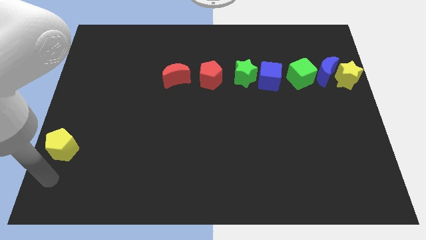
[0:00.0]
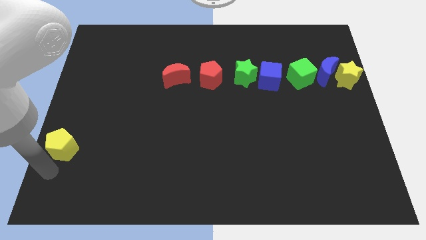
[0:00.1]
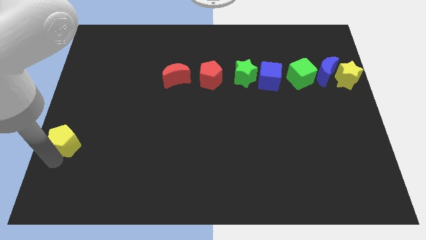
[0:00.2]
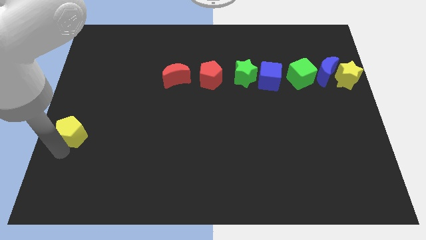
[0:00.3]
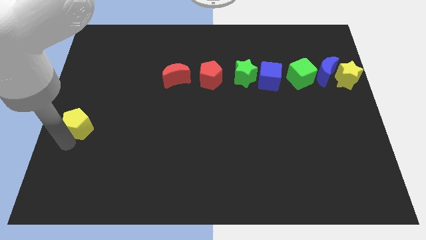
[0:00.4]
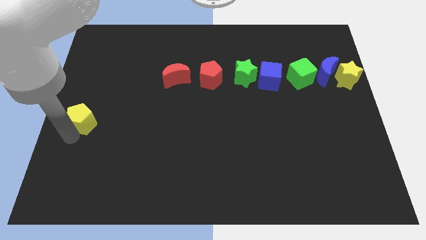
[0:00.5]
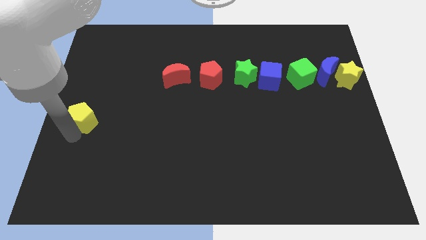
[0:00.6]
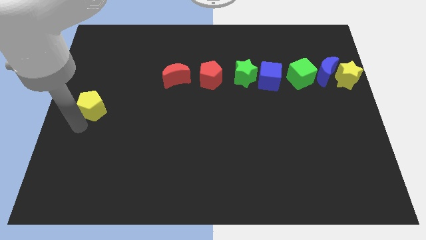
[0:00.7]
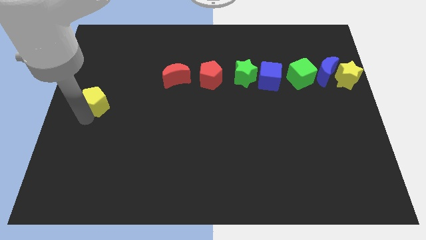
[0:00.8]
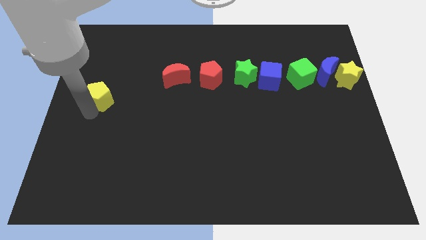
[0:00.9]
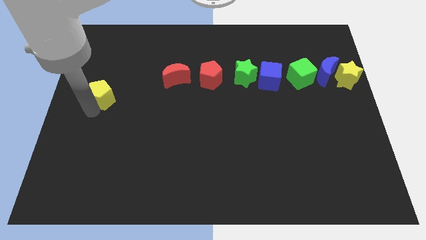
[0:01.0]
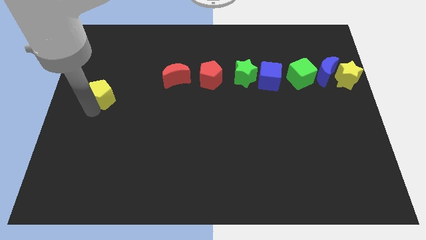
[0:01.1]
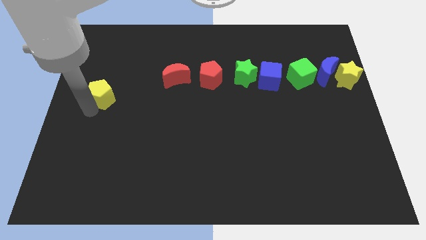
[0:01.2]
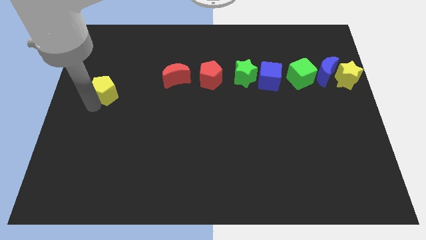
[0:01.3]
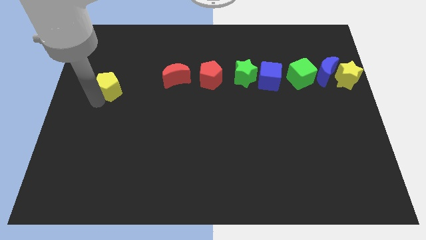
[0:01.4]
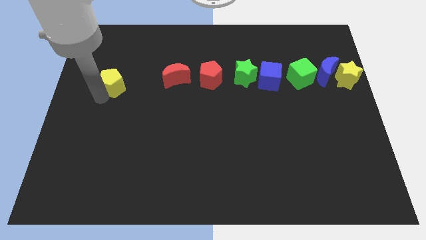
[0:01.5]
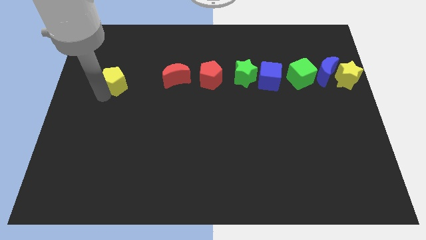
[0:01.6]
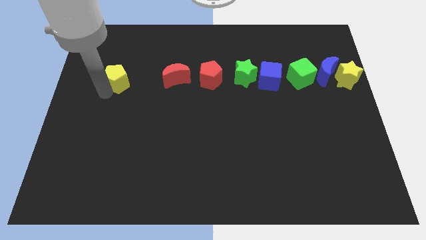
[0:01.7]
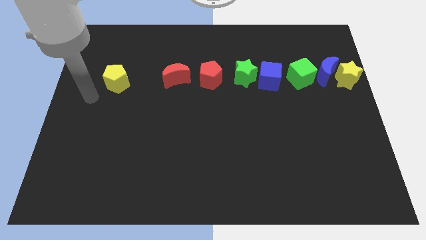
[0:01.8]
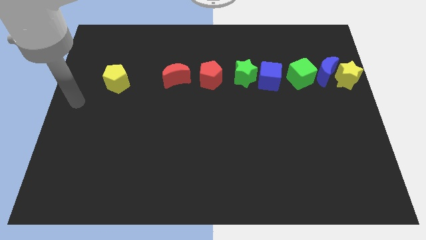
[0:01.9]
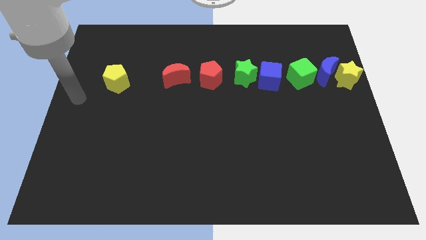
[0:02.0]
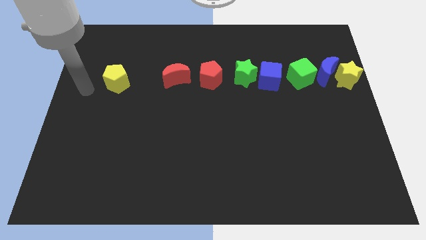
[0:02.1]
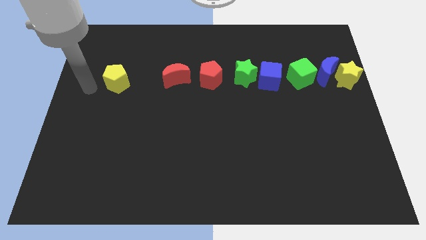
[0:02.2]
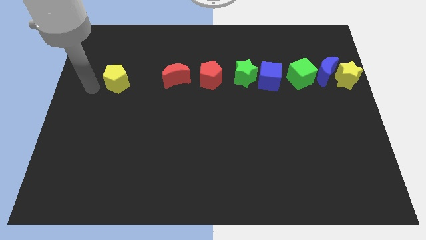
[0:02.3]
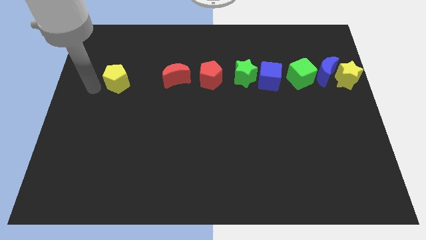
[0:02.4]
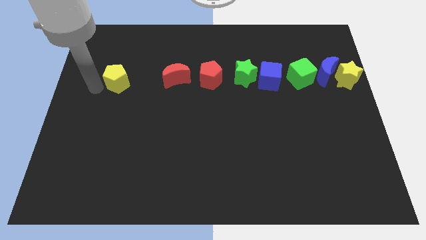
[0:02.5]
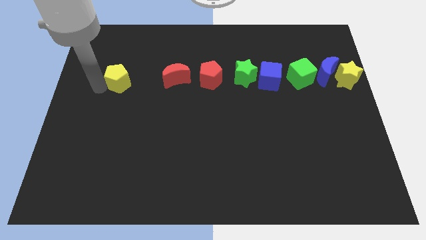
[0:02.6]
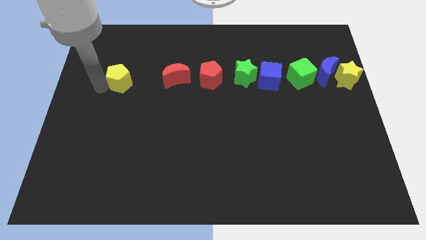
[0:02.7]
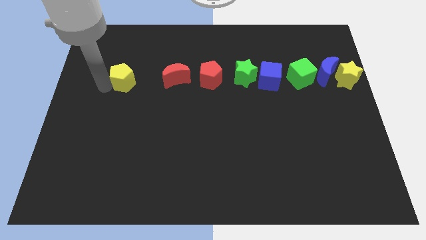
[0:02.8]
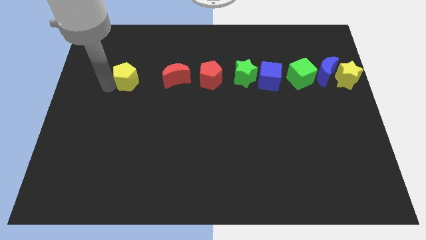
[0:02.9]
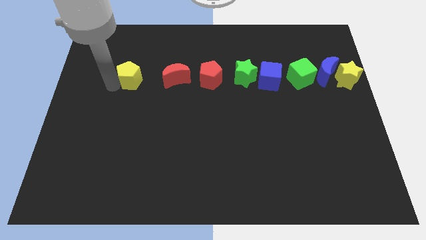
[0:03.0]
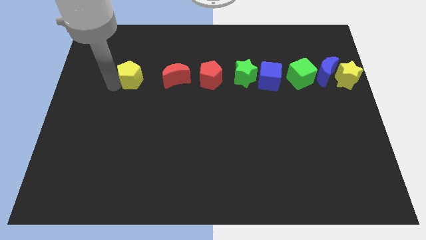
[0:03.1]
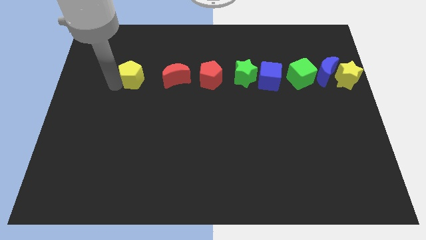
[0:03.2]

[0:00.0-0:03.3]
push the yellow pentagon to the left of the red crescent

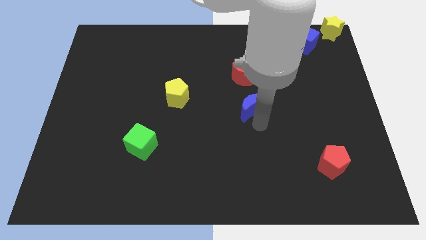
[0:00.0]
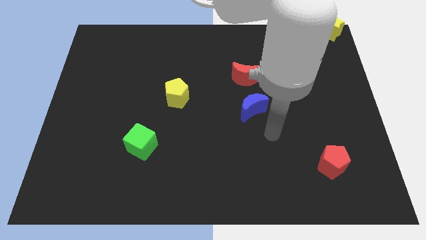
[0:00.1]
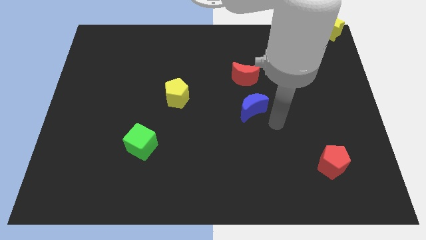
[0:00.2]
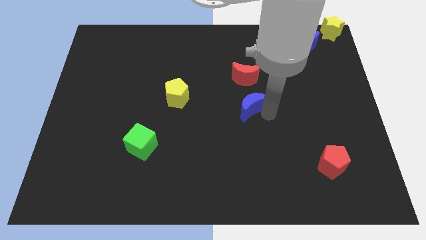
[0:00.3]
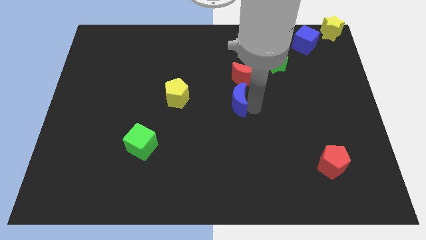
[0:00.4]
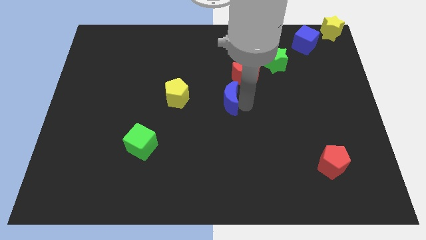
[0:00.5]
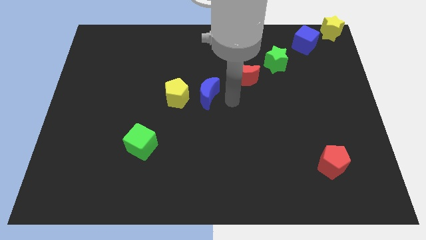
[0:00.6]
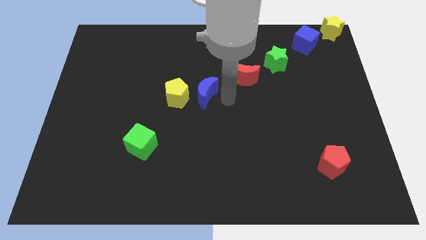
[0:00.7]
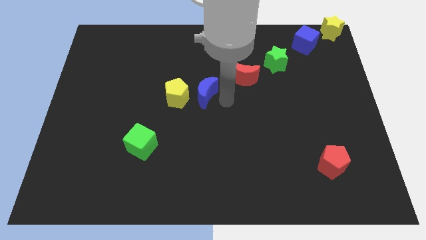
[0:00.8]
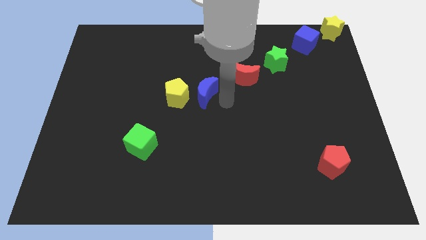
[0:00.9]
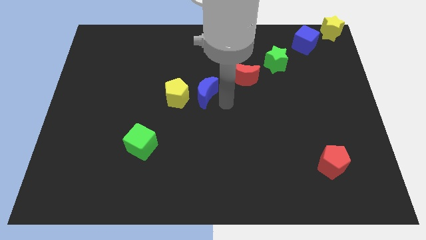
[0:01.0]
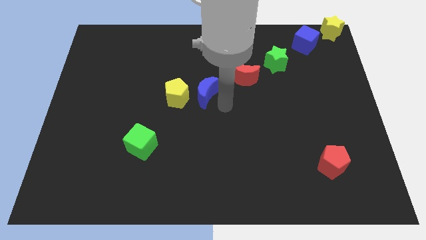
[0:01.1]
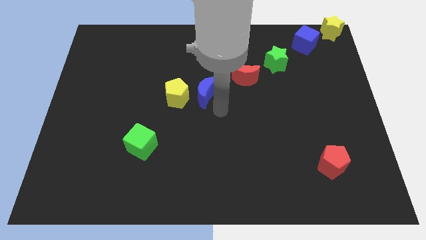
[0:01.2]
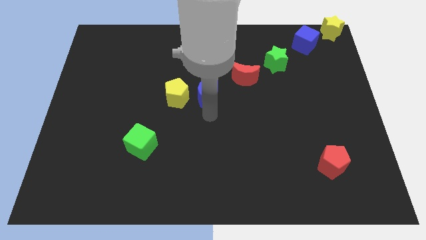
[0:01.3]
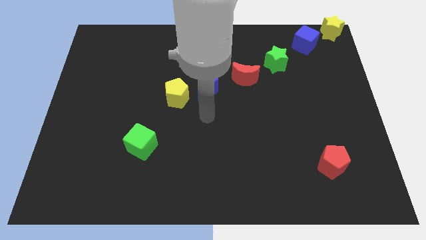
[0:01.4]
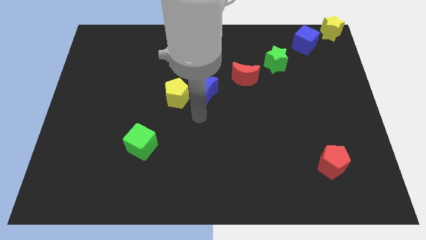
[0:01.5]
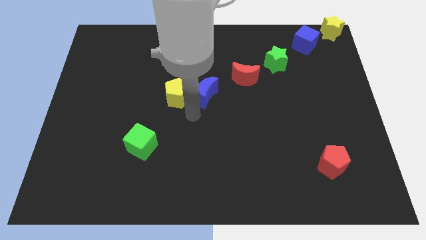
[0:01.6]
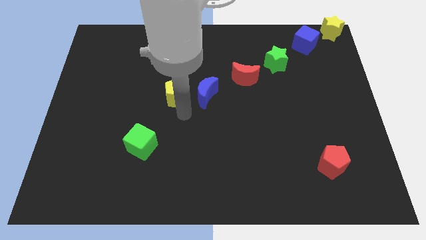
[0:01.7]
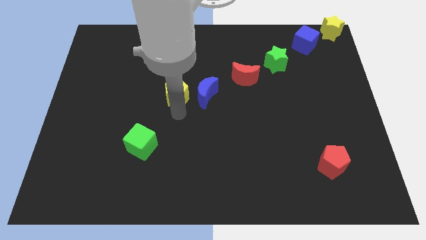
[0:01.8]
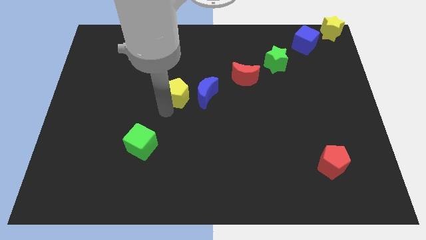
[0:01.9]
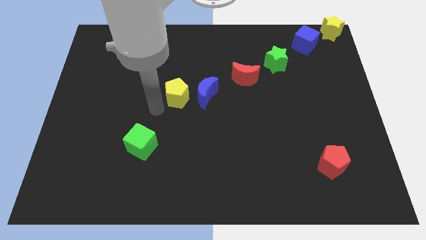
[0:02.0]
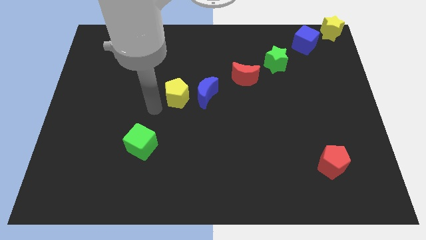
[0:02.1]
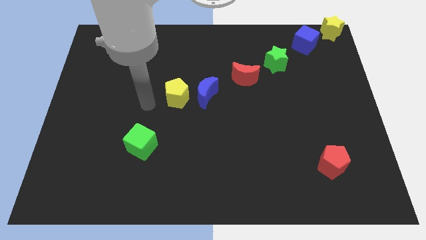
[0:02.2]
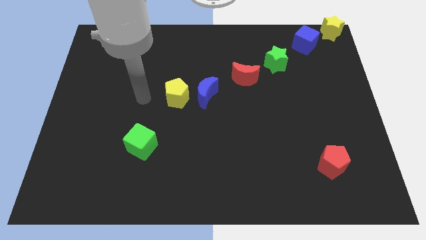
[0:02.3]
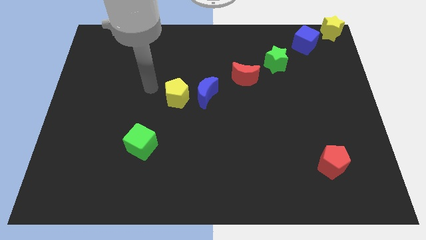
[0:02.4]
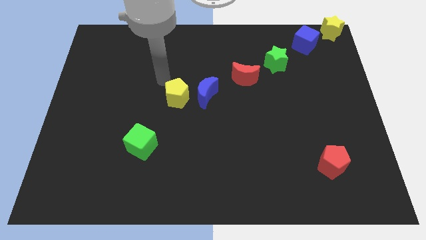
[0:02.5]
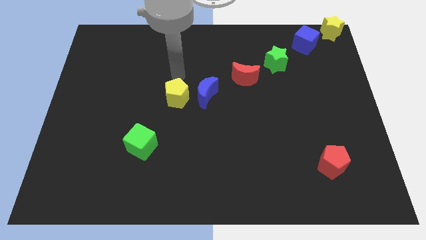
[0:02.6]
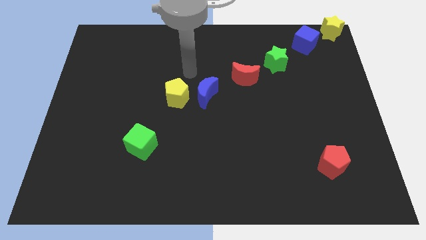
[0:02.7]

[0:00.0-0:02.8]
move the blue moon close to the yellow pentagon

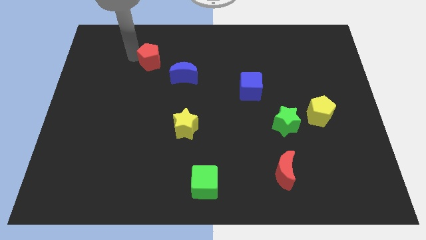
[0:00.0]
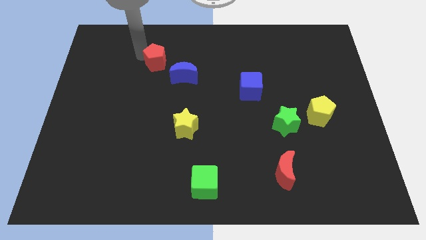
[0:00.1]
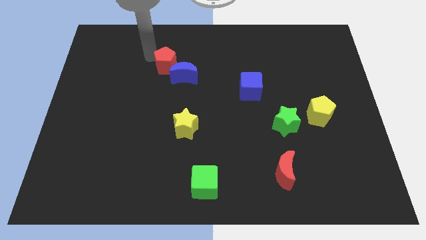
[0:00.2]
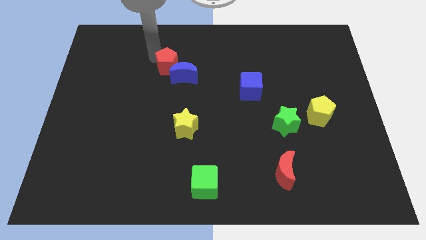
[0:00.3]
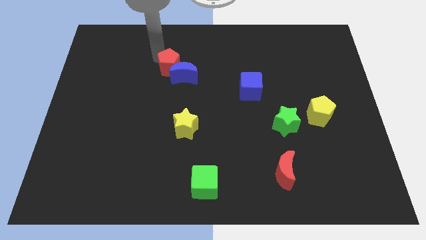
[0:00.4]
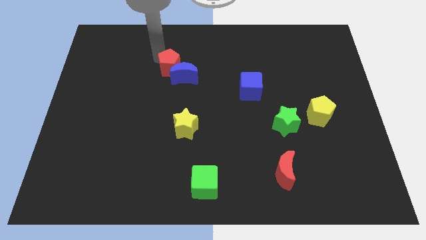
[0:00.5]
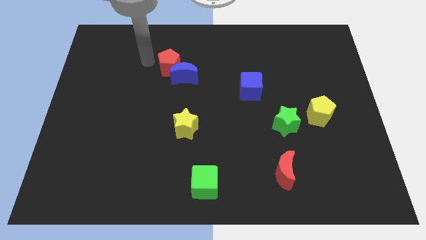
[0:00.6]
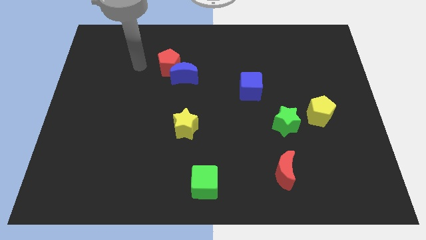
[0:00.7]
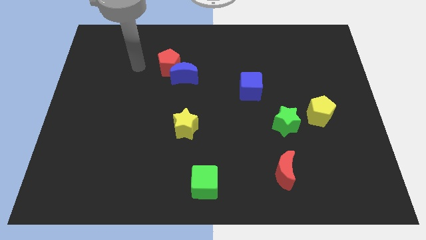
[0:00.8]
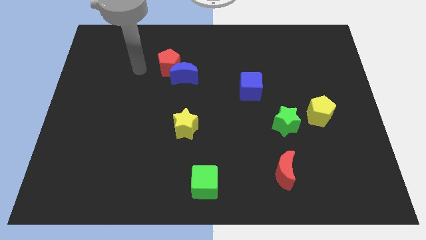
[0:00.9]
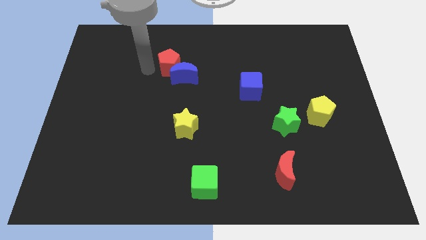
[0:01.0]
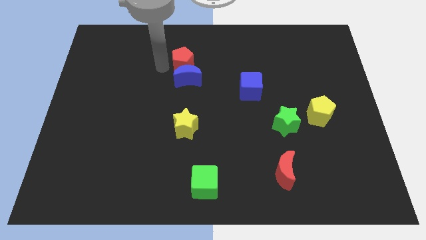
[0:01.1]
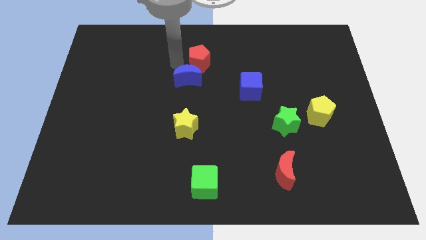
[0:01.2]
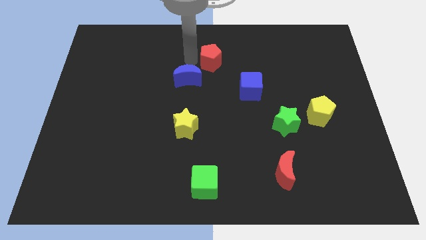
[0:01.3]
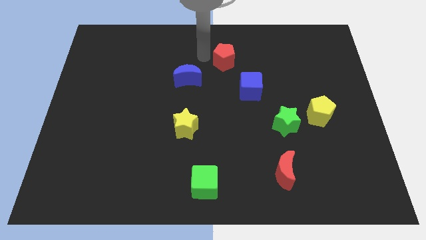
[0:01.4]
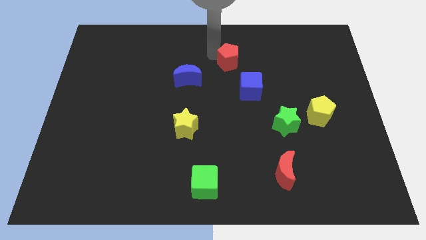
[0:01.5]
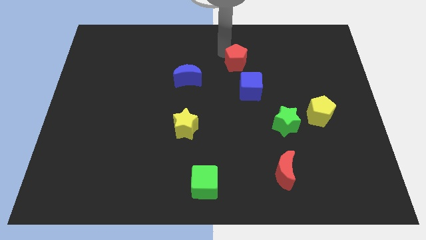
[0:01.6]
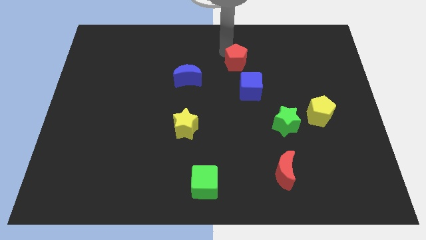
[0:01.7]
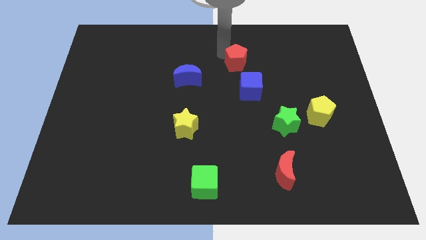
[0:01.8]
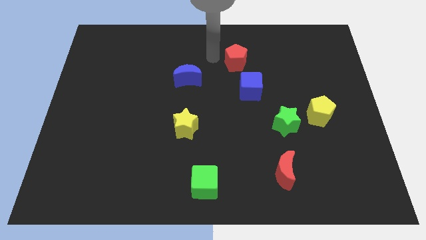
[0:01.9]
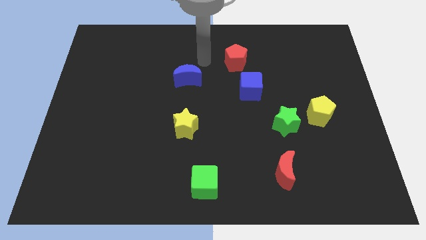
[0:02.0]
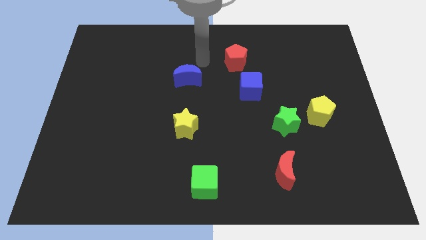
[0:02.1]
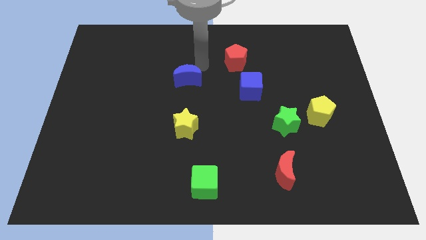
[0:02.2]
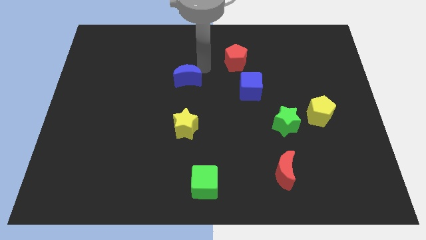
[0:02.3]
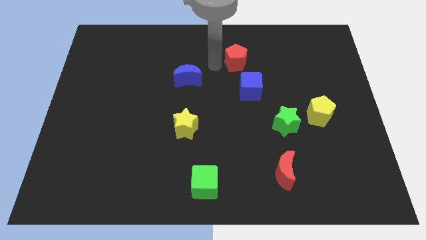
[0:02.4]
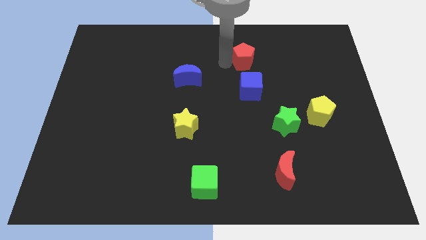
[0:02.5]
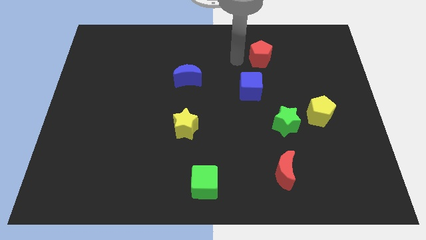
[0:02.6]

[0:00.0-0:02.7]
place the red pentagon above the blue cube

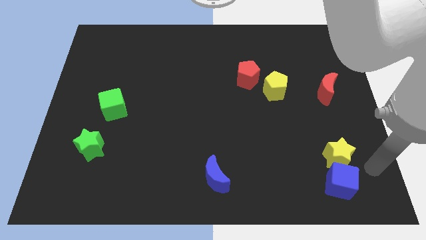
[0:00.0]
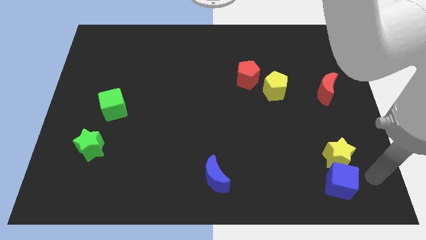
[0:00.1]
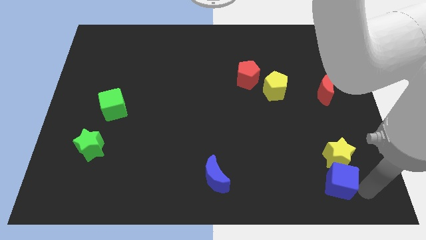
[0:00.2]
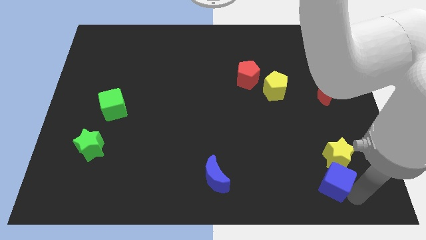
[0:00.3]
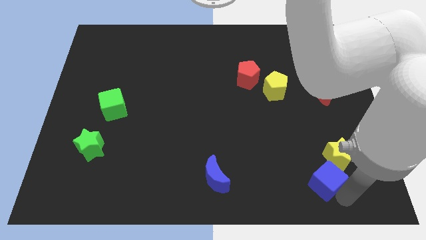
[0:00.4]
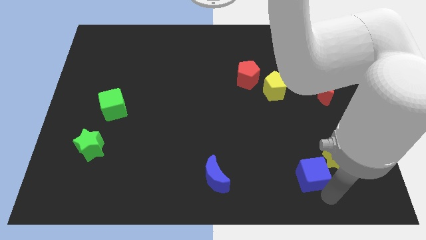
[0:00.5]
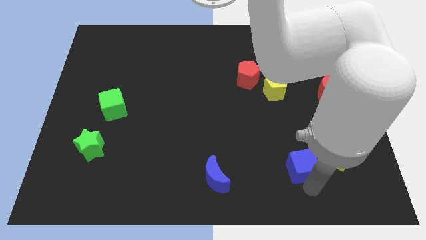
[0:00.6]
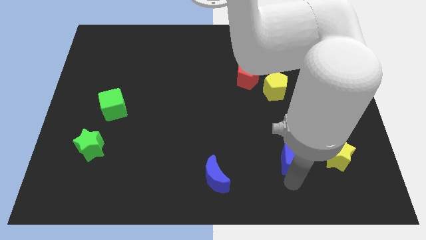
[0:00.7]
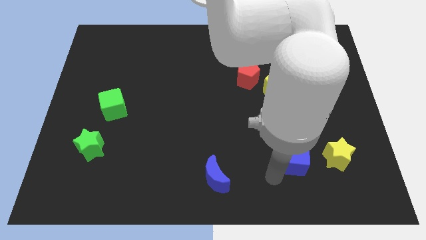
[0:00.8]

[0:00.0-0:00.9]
place the blue cube to the left of the yellow star
